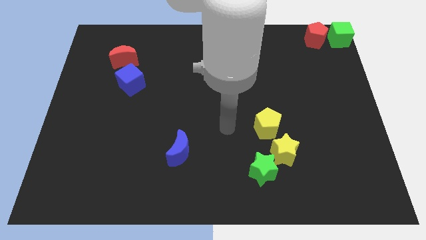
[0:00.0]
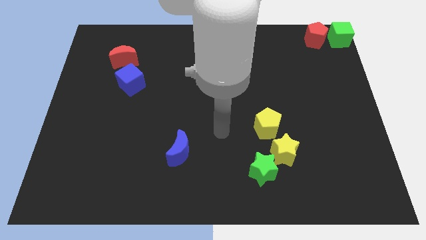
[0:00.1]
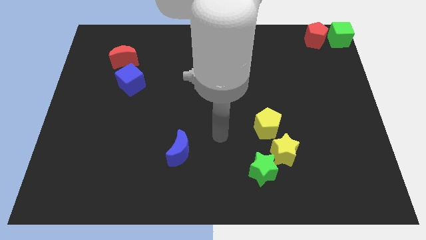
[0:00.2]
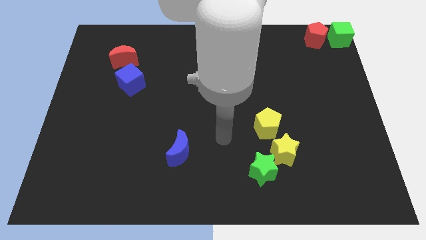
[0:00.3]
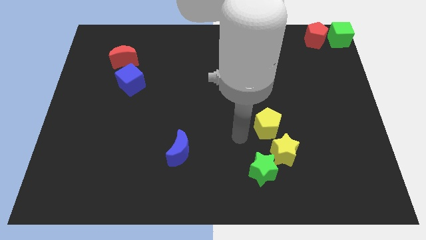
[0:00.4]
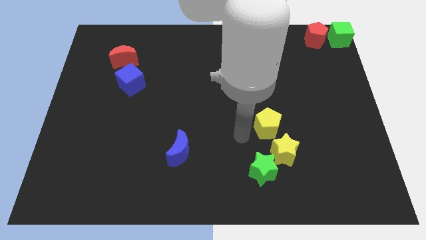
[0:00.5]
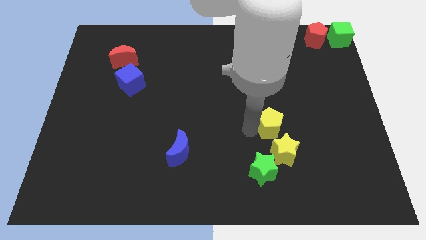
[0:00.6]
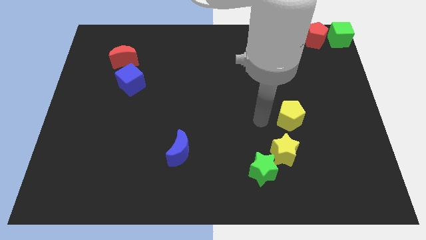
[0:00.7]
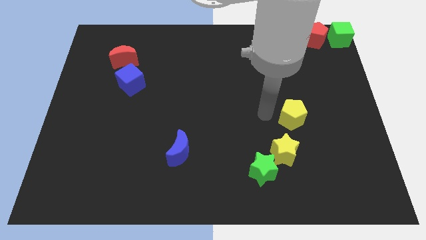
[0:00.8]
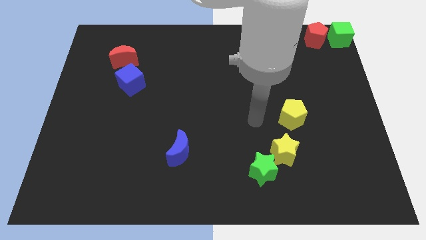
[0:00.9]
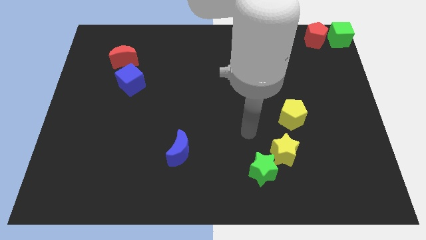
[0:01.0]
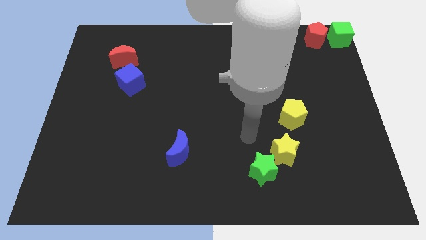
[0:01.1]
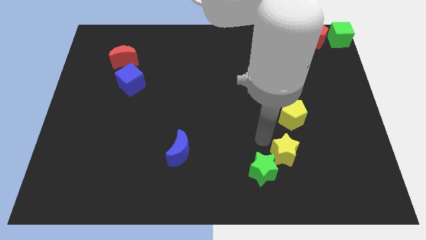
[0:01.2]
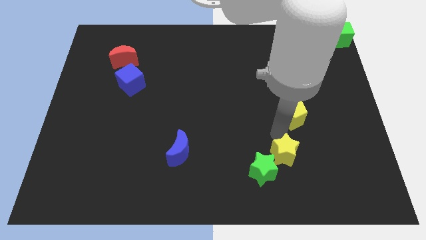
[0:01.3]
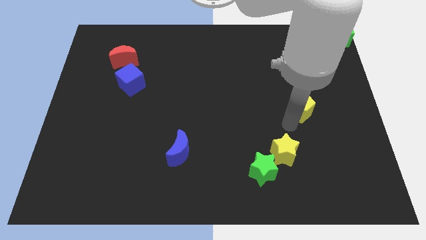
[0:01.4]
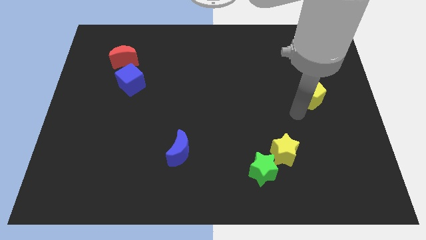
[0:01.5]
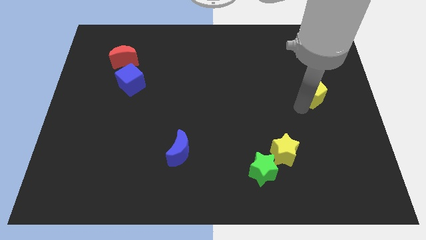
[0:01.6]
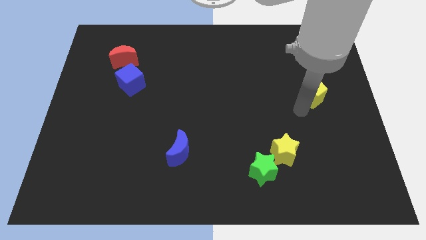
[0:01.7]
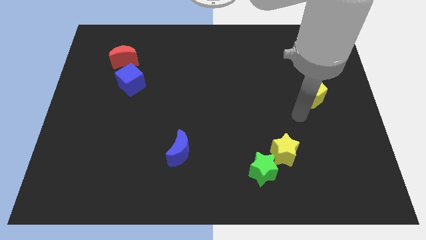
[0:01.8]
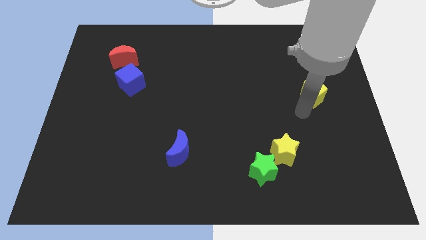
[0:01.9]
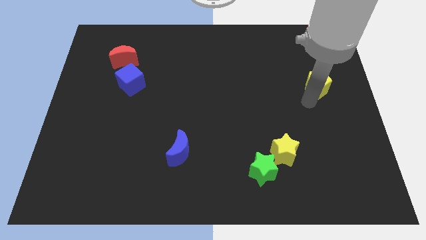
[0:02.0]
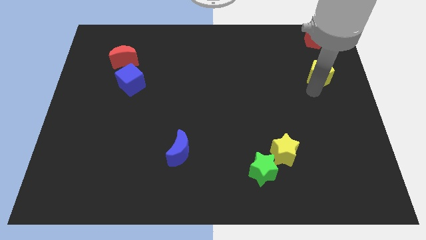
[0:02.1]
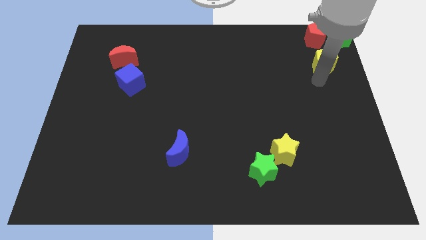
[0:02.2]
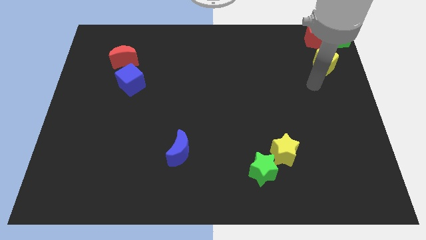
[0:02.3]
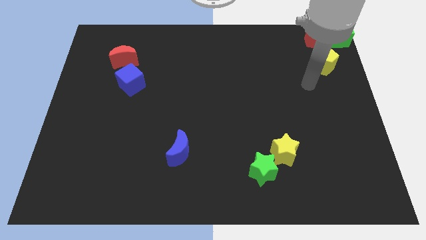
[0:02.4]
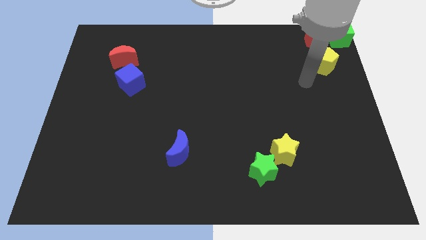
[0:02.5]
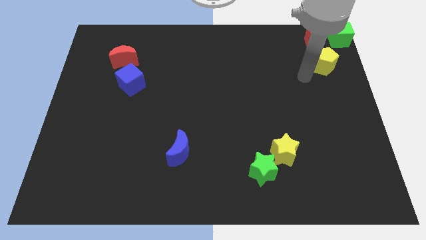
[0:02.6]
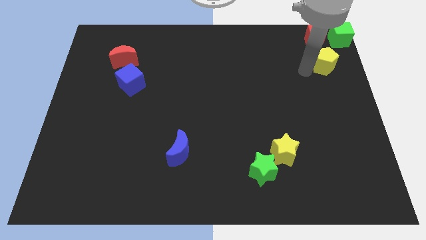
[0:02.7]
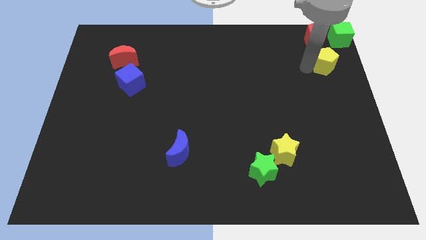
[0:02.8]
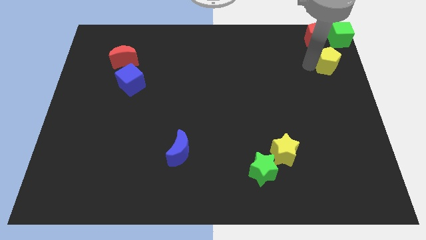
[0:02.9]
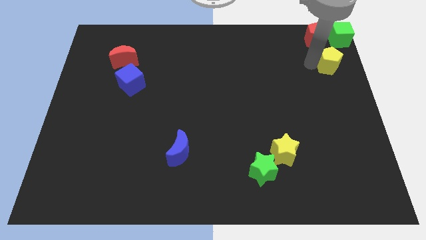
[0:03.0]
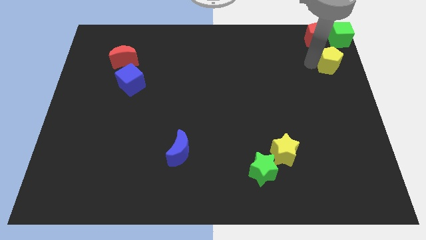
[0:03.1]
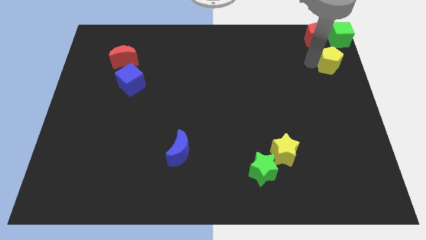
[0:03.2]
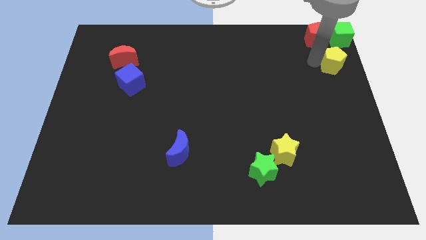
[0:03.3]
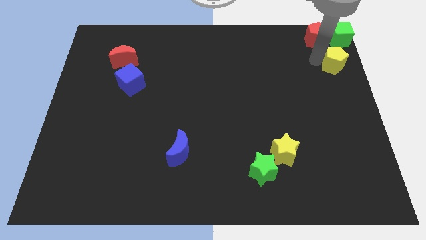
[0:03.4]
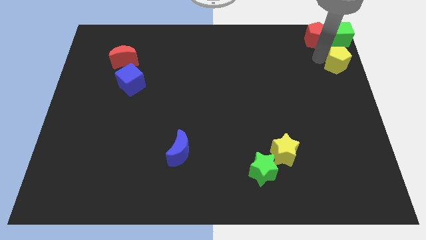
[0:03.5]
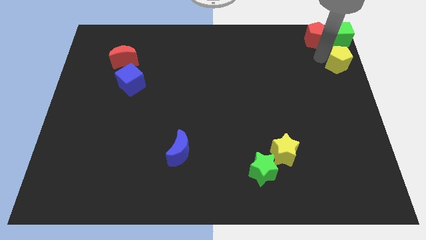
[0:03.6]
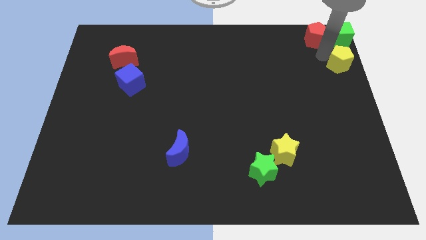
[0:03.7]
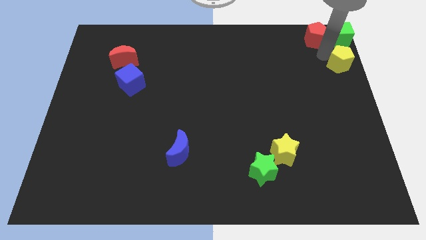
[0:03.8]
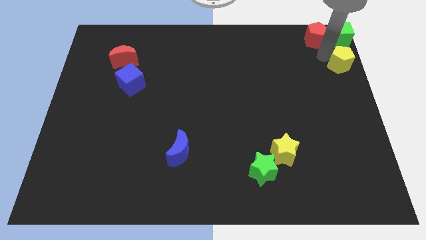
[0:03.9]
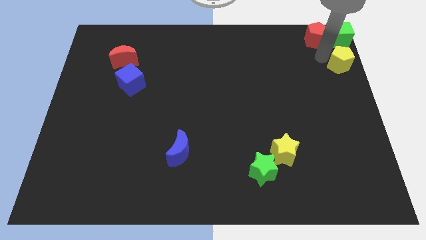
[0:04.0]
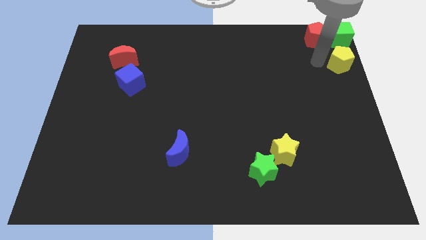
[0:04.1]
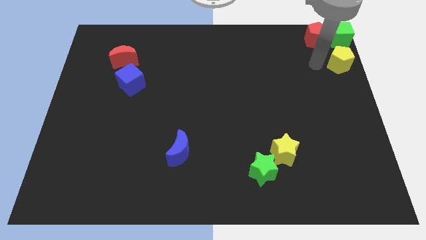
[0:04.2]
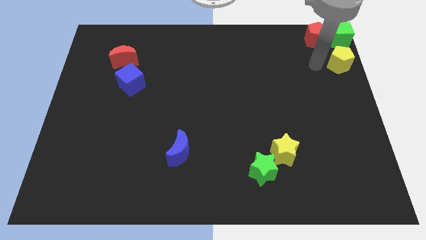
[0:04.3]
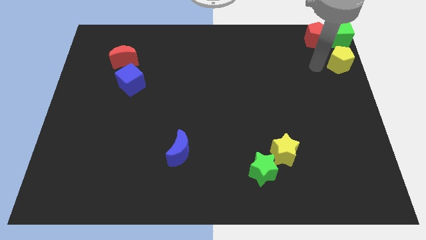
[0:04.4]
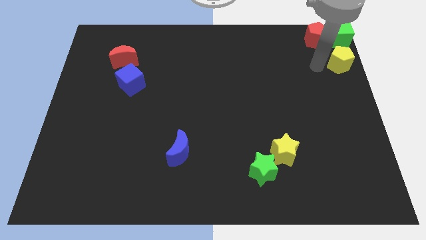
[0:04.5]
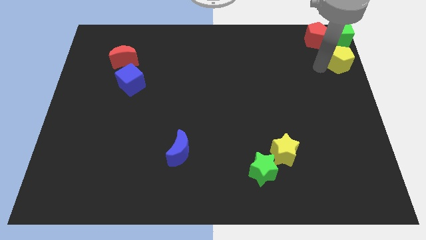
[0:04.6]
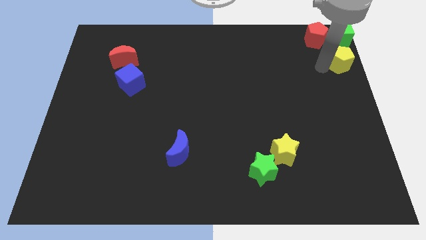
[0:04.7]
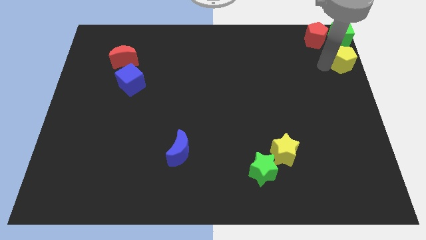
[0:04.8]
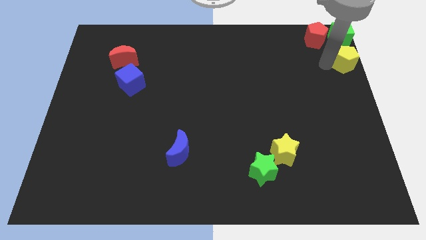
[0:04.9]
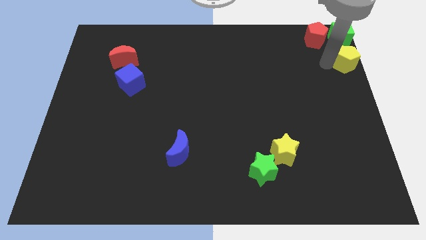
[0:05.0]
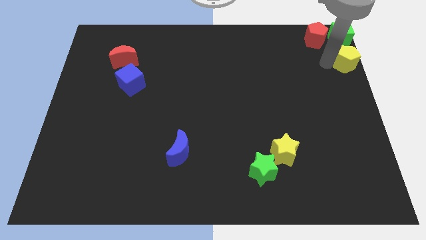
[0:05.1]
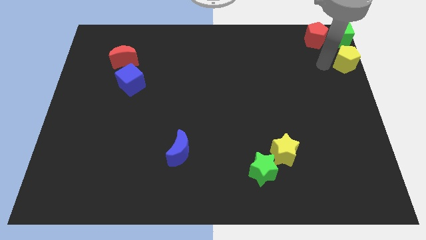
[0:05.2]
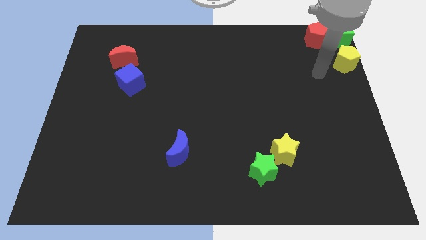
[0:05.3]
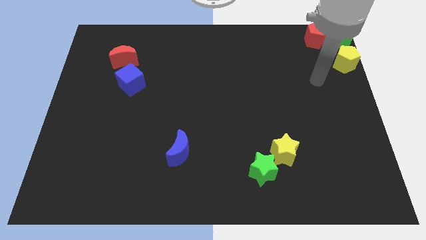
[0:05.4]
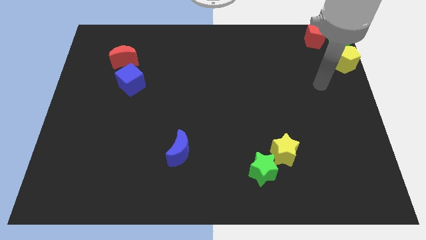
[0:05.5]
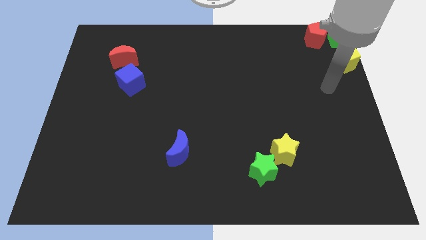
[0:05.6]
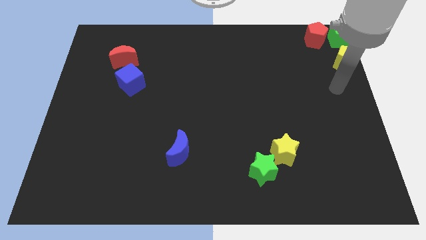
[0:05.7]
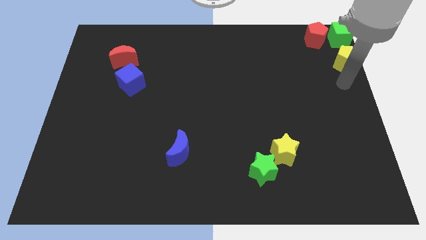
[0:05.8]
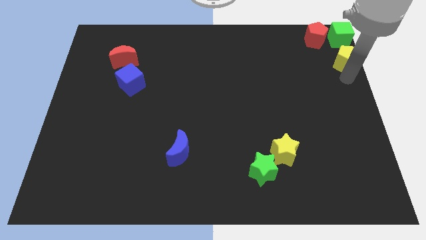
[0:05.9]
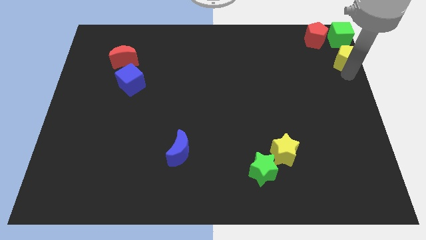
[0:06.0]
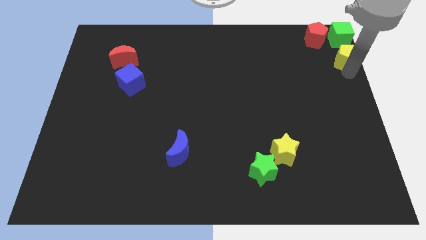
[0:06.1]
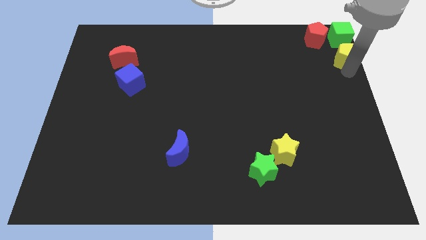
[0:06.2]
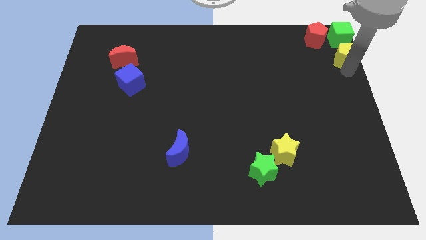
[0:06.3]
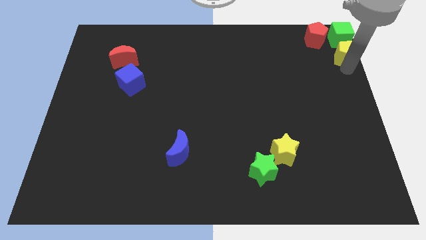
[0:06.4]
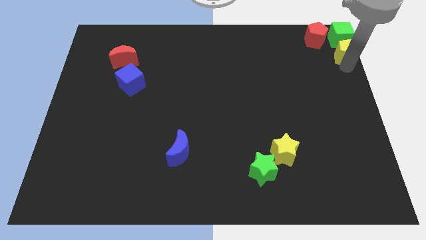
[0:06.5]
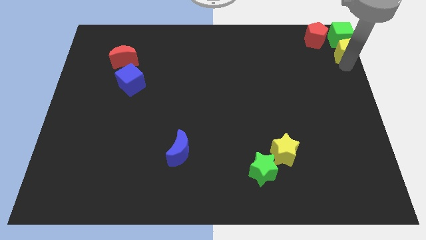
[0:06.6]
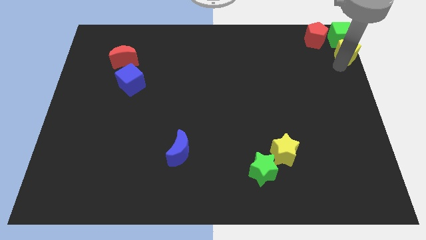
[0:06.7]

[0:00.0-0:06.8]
put the yellow pentagon to the right of the red crescent

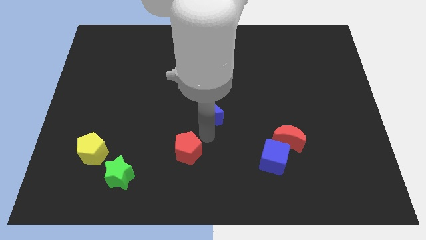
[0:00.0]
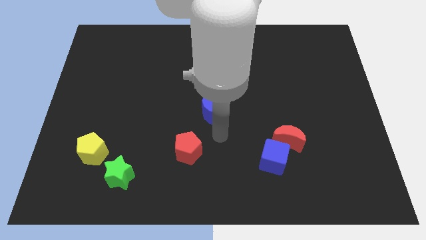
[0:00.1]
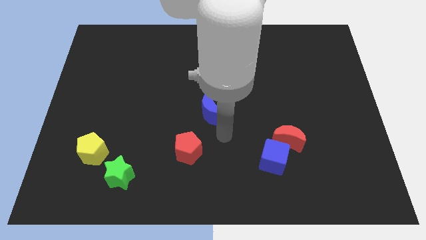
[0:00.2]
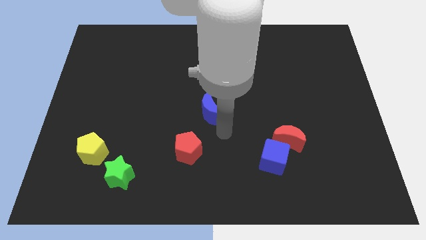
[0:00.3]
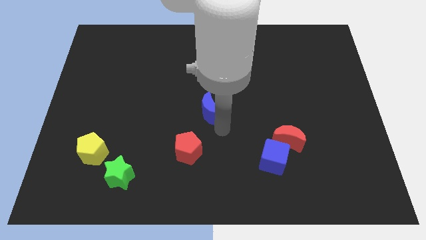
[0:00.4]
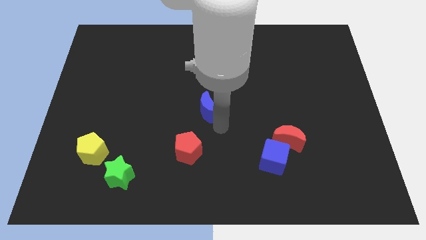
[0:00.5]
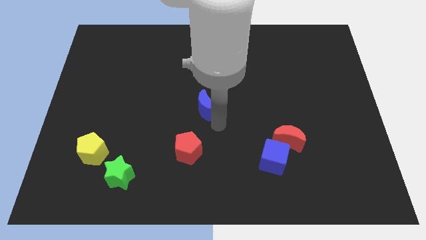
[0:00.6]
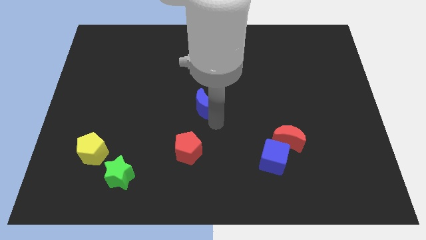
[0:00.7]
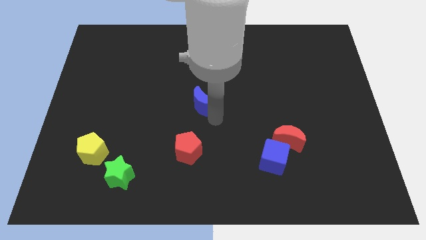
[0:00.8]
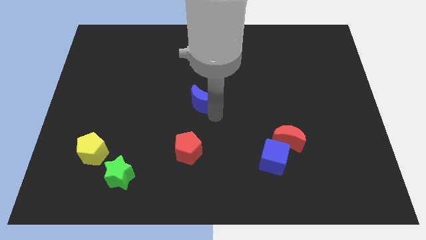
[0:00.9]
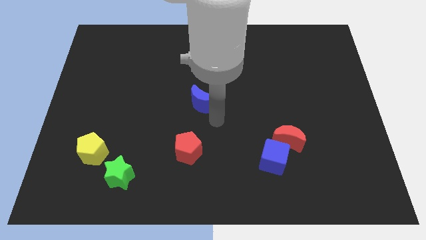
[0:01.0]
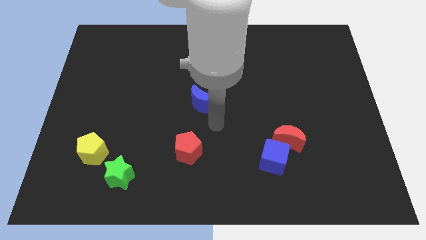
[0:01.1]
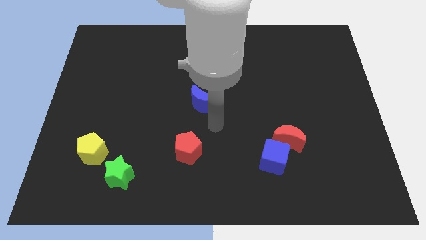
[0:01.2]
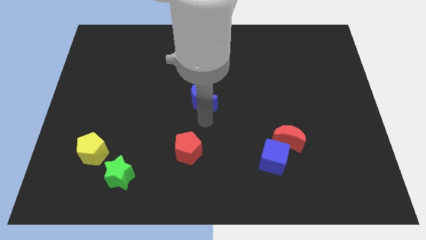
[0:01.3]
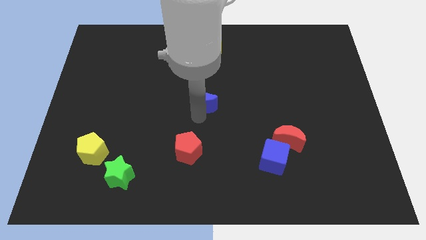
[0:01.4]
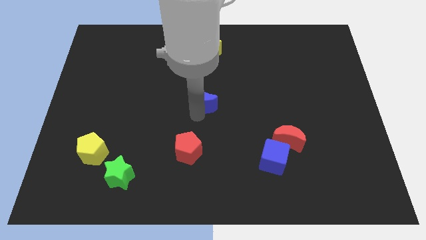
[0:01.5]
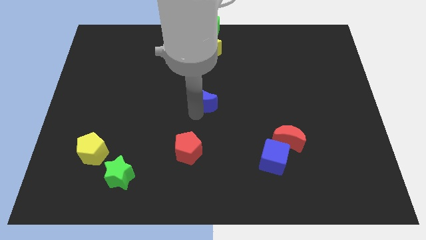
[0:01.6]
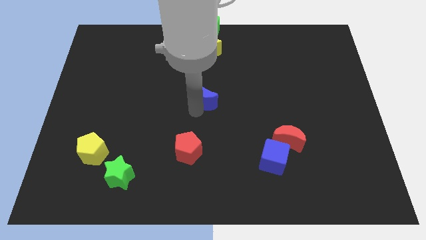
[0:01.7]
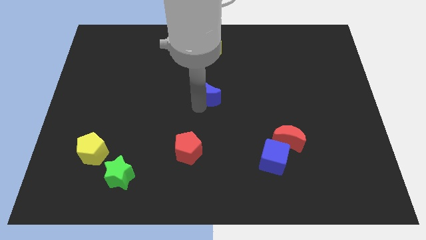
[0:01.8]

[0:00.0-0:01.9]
move the blue moon to the center

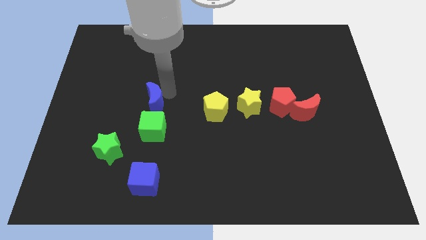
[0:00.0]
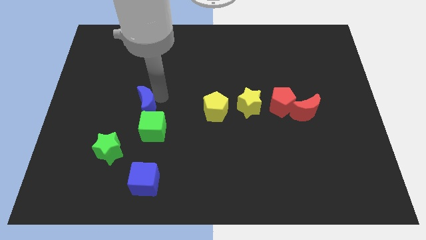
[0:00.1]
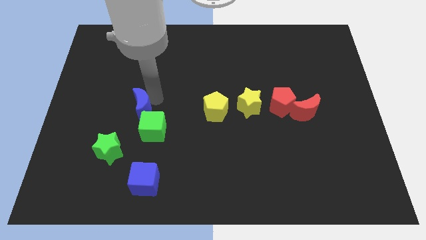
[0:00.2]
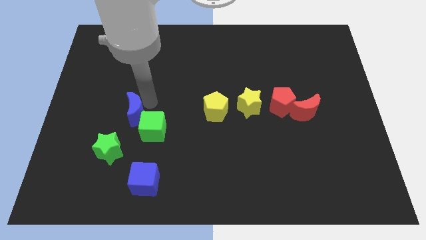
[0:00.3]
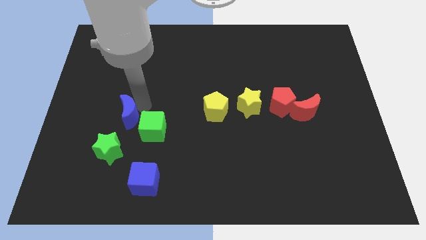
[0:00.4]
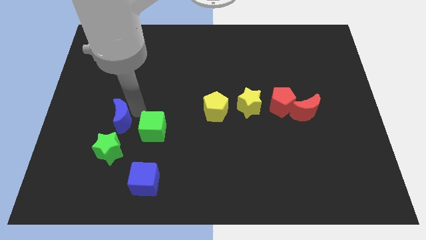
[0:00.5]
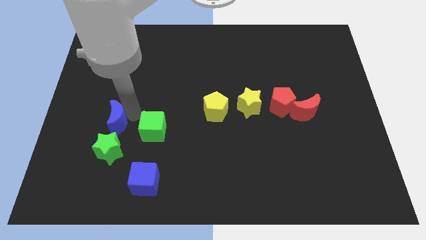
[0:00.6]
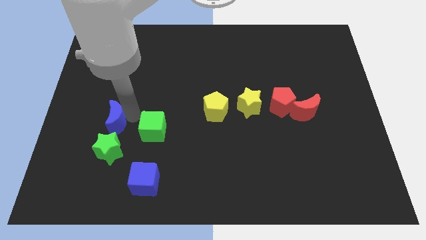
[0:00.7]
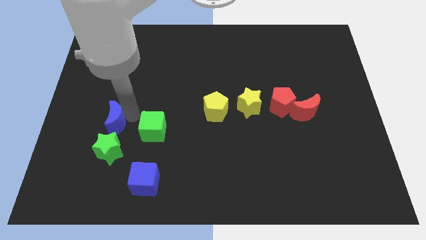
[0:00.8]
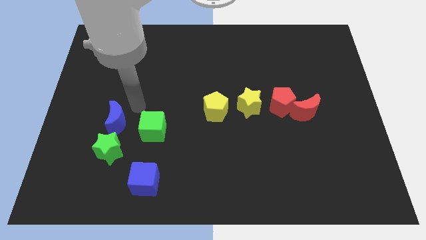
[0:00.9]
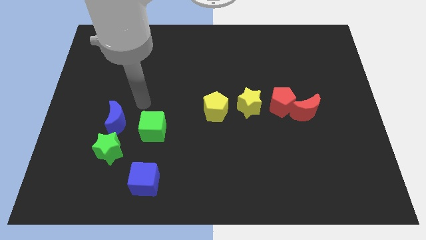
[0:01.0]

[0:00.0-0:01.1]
push blue crescent to the top of green star
